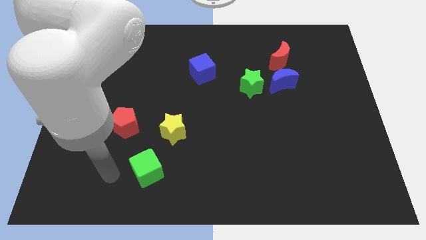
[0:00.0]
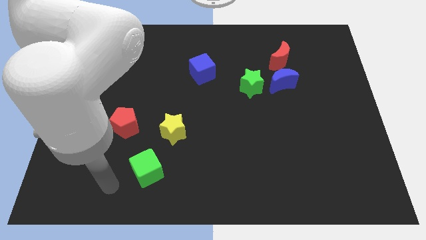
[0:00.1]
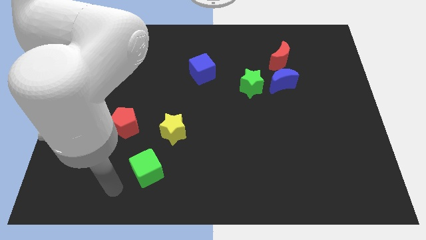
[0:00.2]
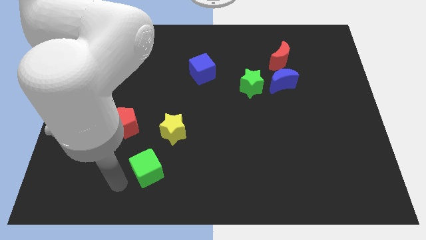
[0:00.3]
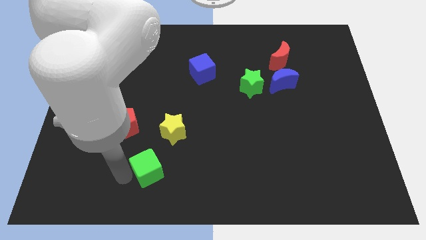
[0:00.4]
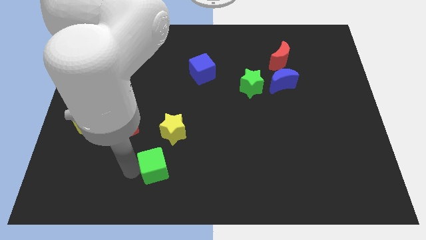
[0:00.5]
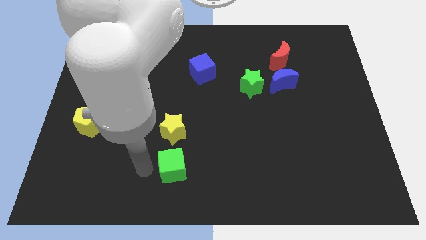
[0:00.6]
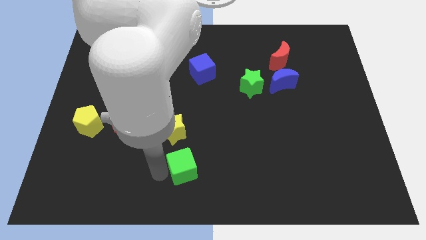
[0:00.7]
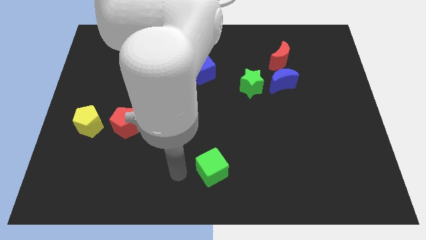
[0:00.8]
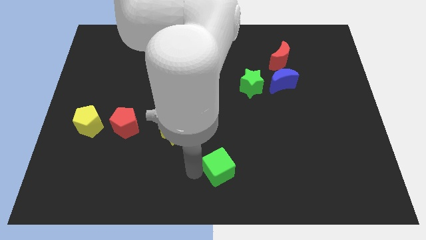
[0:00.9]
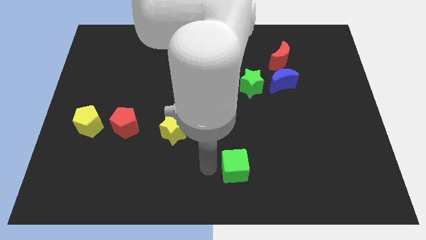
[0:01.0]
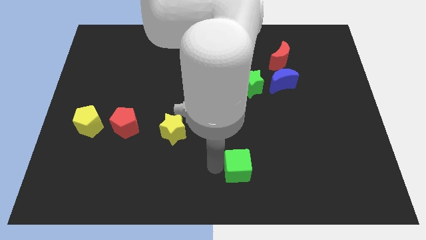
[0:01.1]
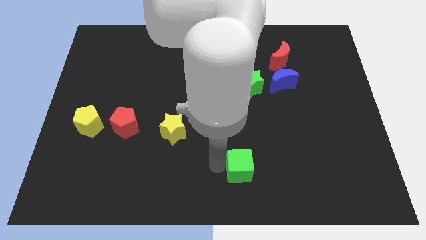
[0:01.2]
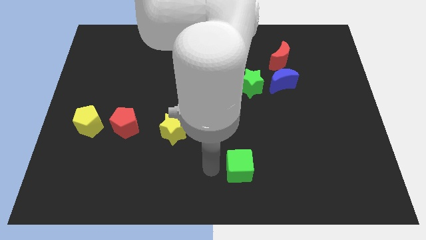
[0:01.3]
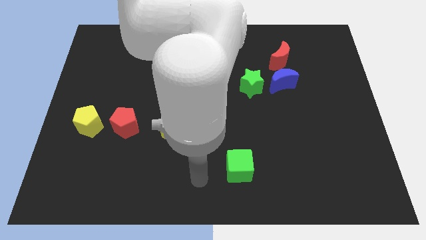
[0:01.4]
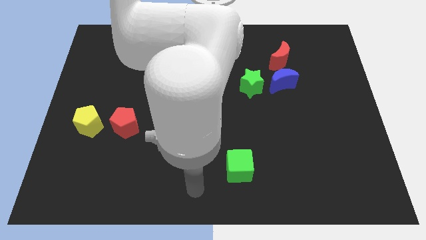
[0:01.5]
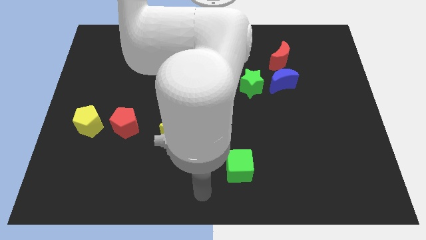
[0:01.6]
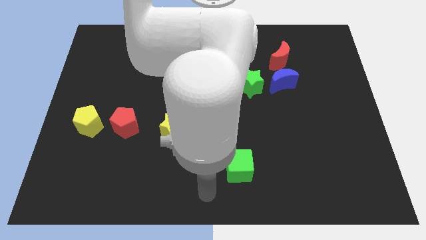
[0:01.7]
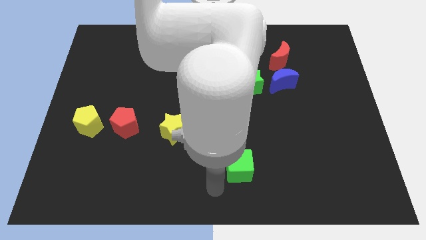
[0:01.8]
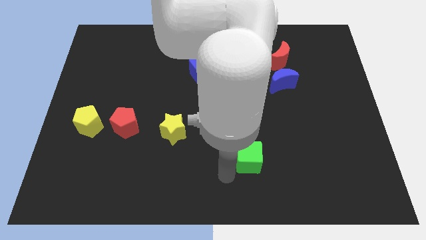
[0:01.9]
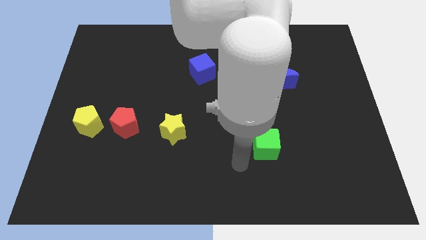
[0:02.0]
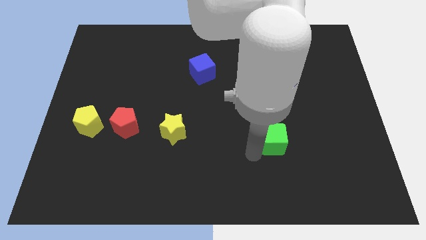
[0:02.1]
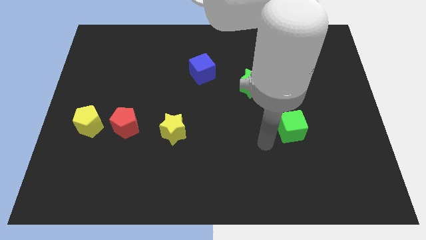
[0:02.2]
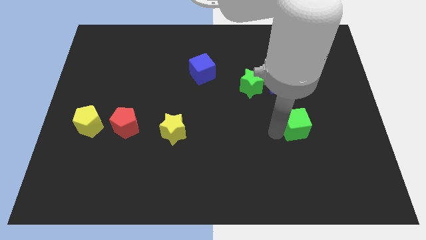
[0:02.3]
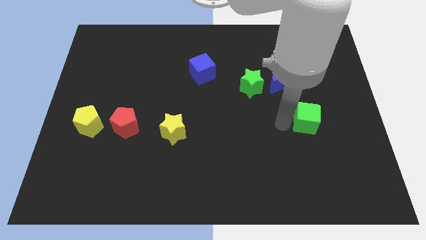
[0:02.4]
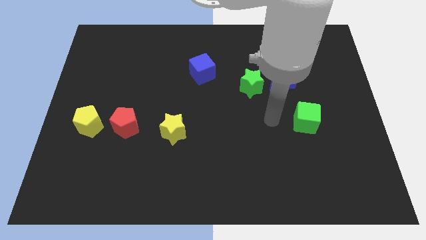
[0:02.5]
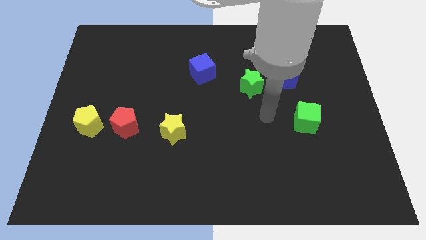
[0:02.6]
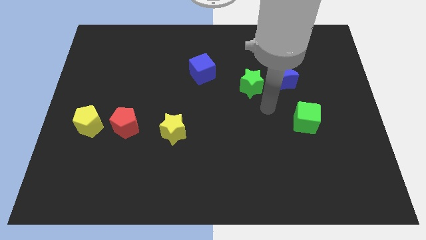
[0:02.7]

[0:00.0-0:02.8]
push the green cube to the horizontal right of the yellow star

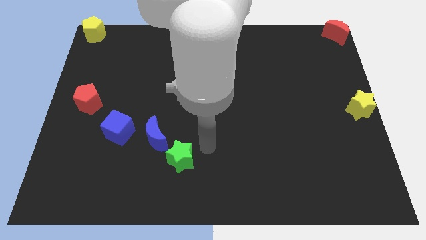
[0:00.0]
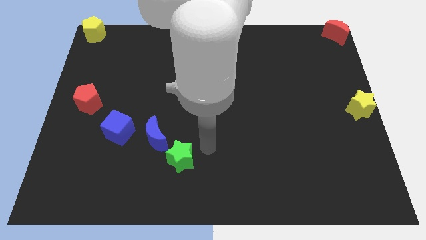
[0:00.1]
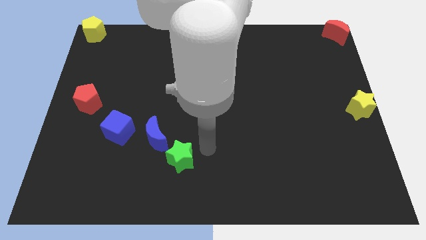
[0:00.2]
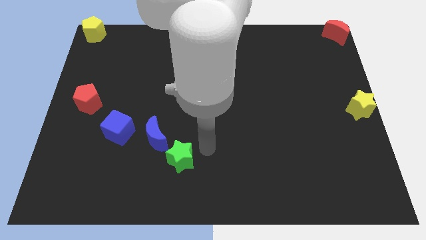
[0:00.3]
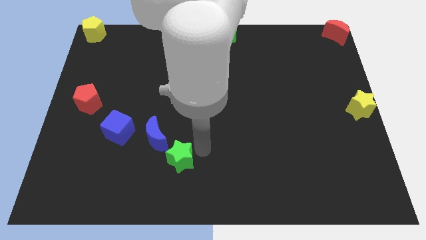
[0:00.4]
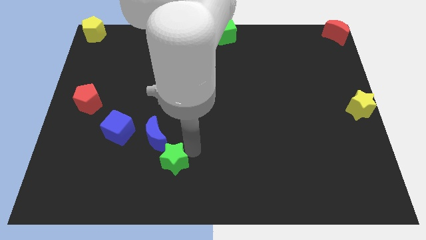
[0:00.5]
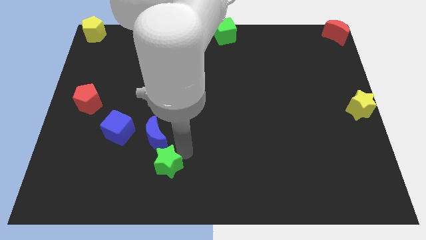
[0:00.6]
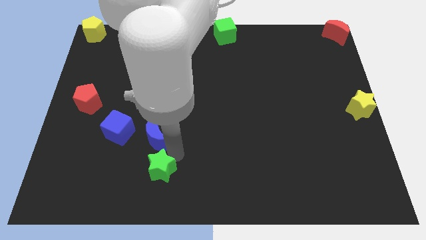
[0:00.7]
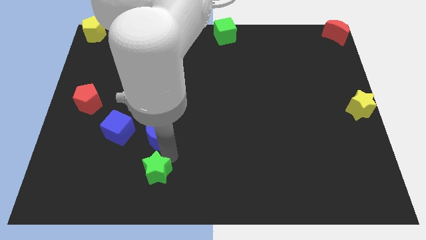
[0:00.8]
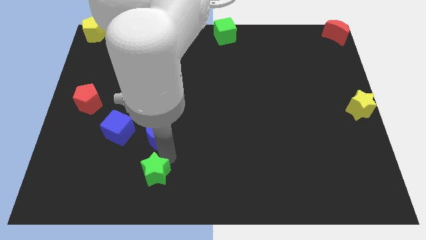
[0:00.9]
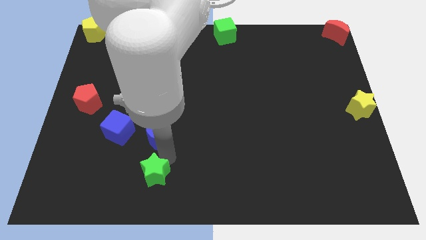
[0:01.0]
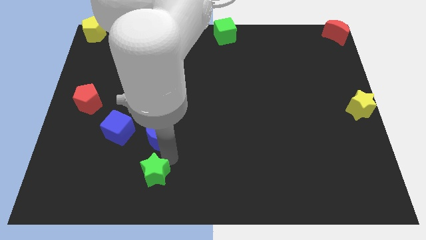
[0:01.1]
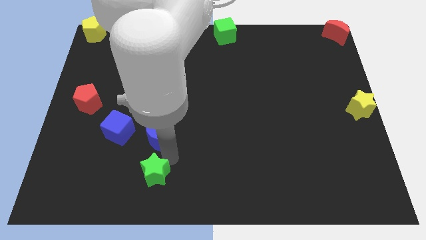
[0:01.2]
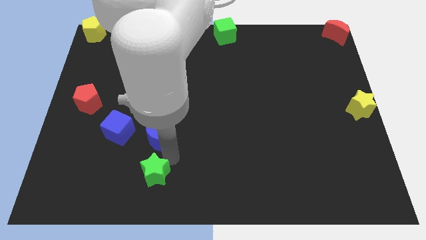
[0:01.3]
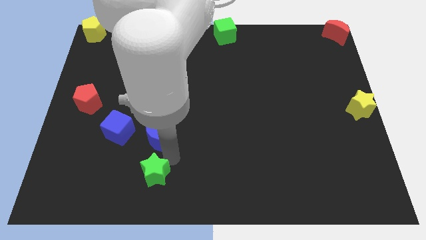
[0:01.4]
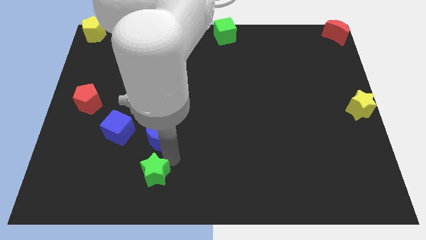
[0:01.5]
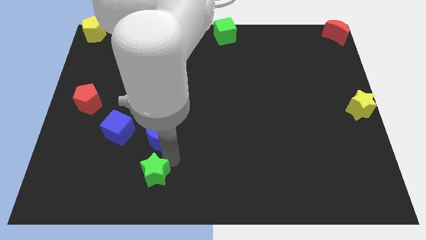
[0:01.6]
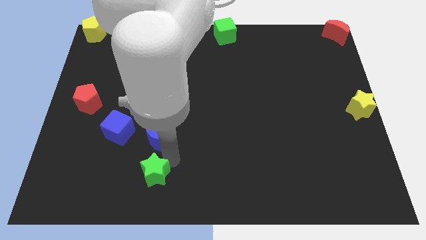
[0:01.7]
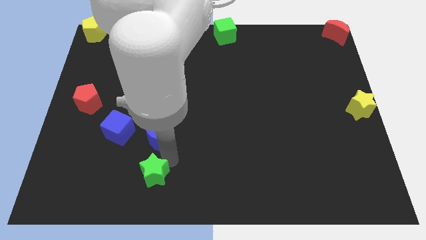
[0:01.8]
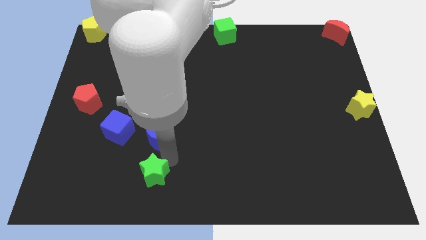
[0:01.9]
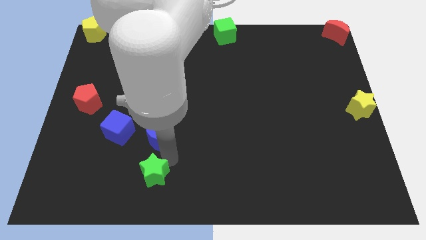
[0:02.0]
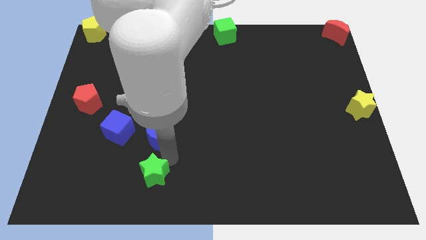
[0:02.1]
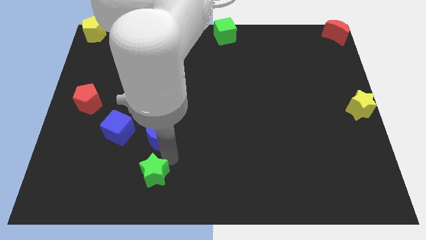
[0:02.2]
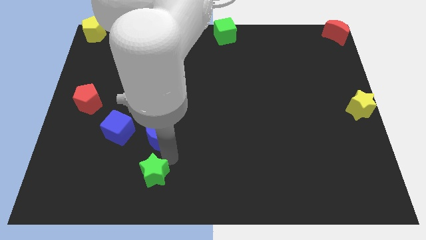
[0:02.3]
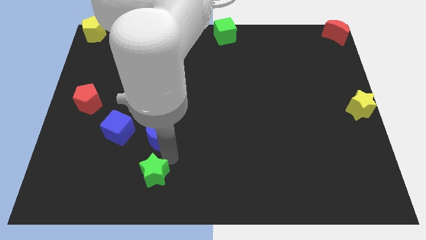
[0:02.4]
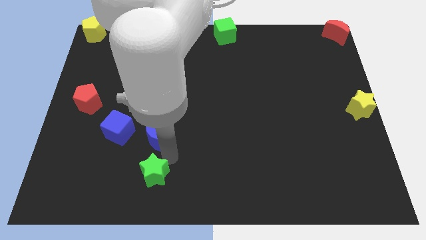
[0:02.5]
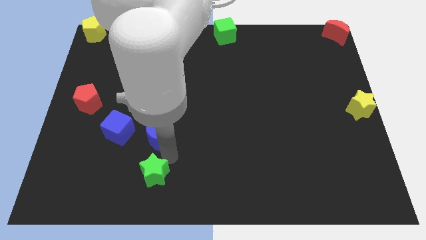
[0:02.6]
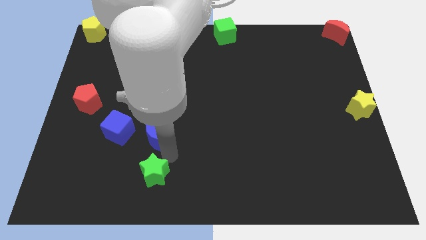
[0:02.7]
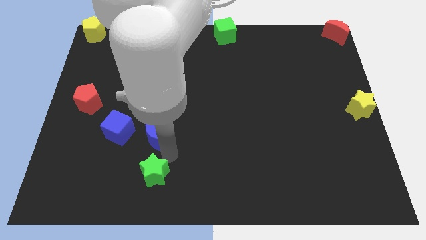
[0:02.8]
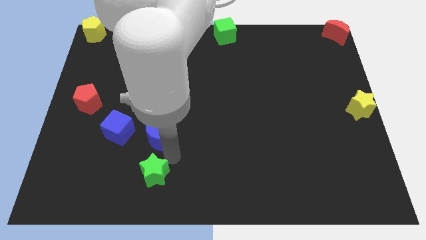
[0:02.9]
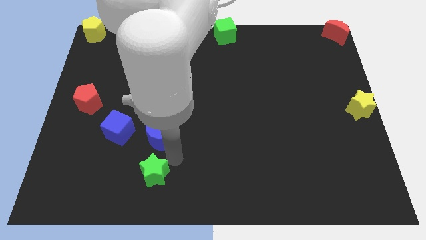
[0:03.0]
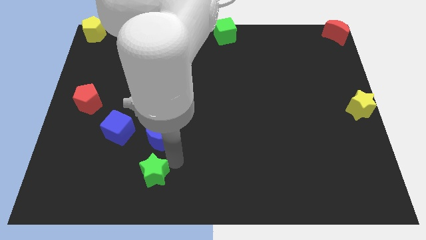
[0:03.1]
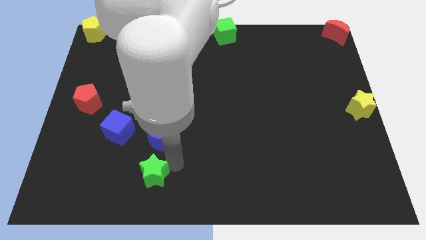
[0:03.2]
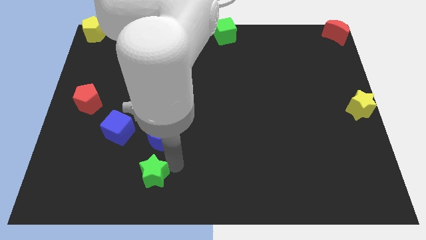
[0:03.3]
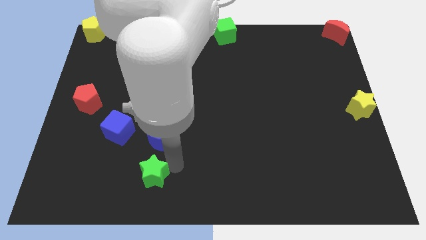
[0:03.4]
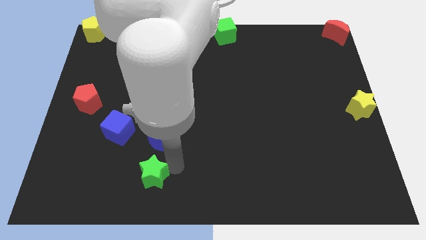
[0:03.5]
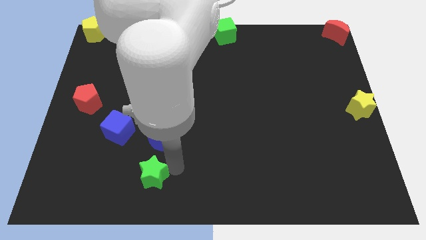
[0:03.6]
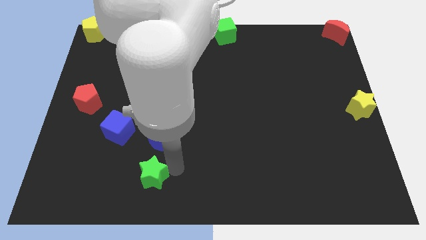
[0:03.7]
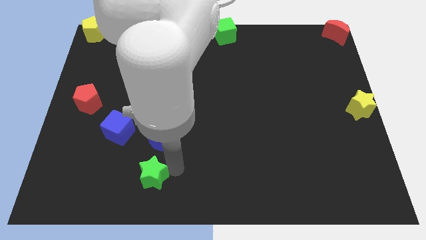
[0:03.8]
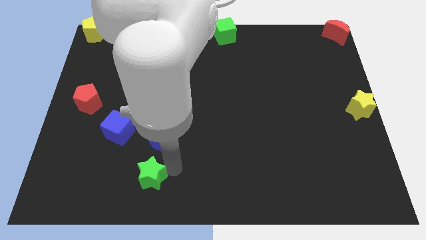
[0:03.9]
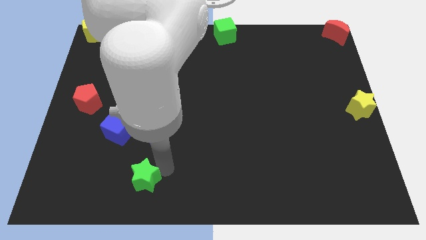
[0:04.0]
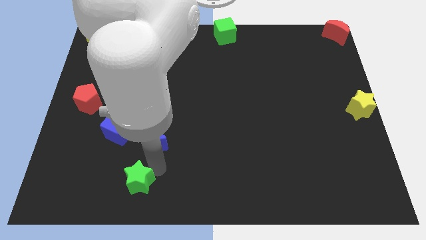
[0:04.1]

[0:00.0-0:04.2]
move green star slightly down

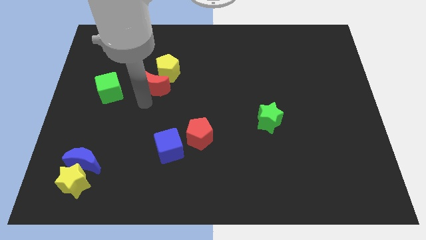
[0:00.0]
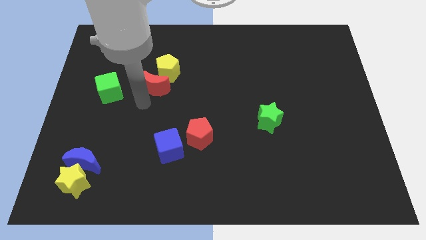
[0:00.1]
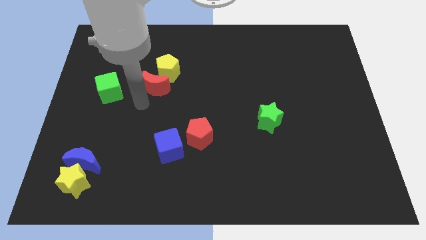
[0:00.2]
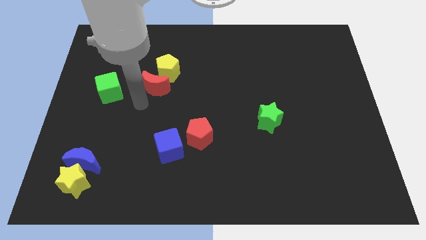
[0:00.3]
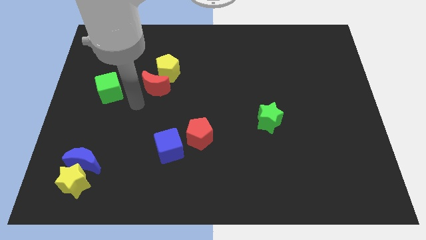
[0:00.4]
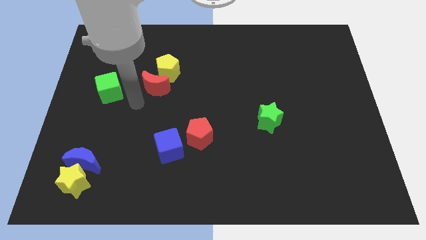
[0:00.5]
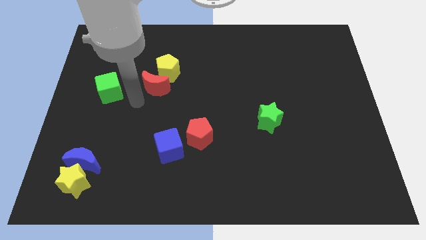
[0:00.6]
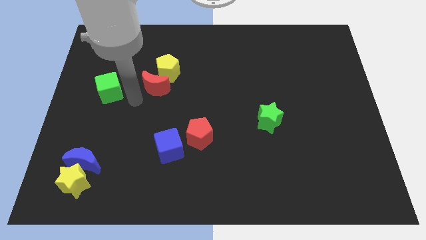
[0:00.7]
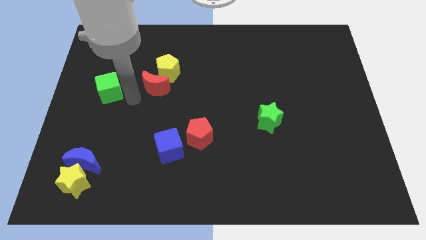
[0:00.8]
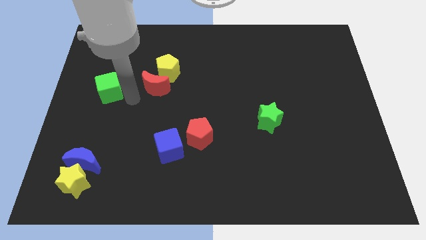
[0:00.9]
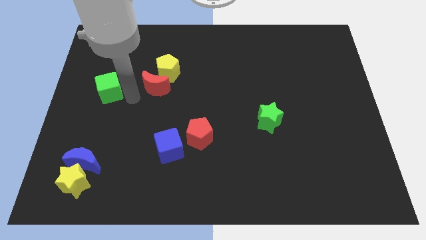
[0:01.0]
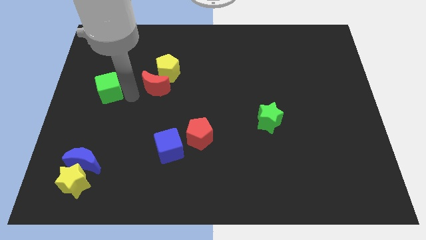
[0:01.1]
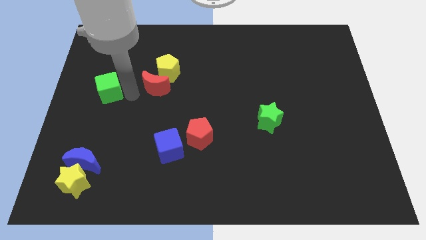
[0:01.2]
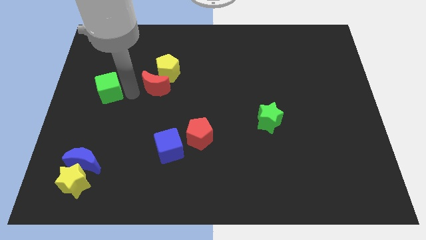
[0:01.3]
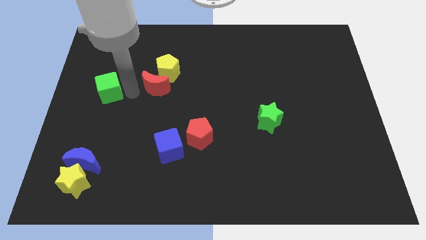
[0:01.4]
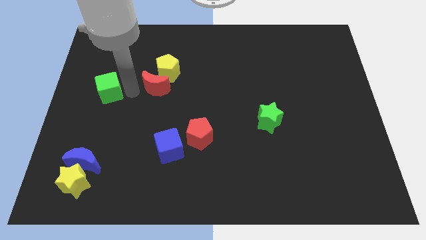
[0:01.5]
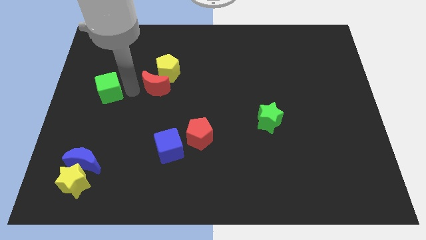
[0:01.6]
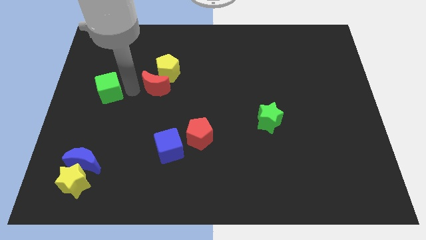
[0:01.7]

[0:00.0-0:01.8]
move the arm towards the right side of the green cube
